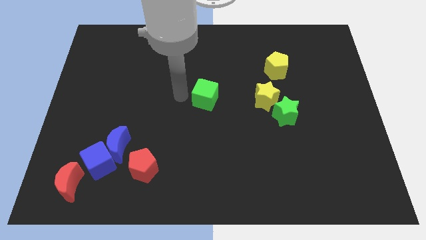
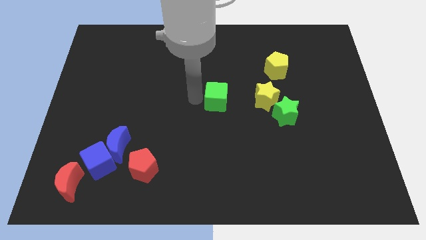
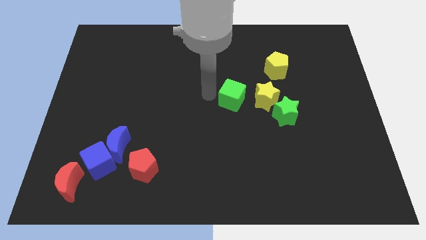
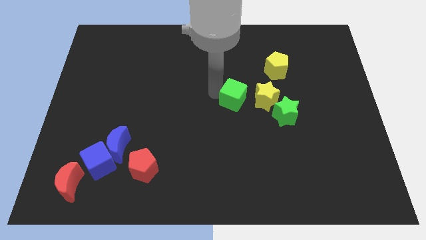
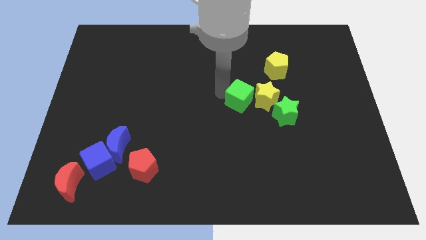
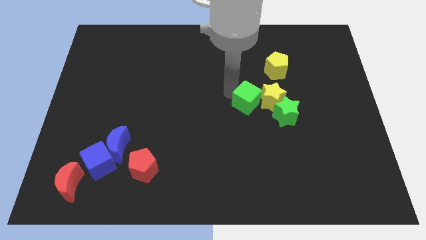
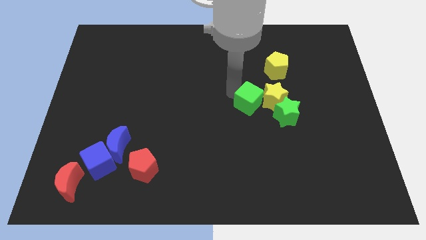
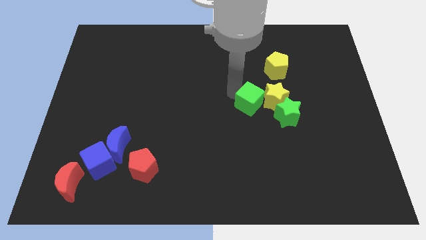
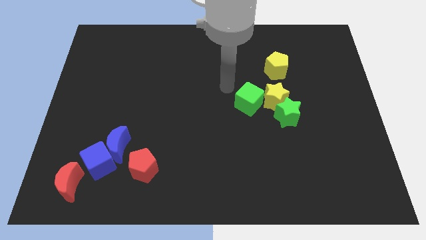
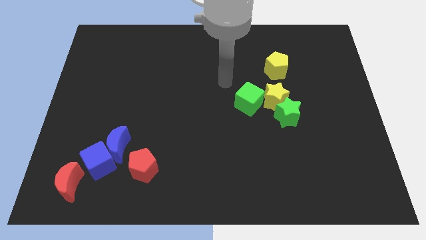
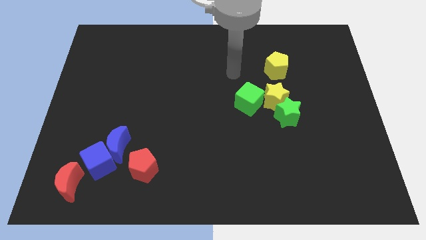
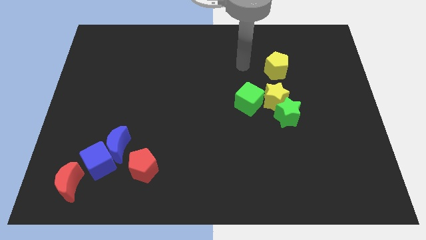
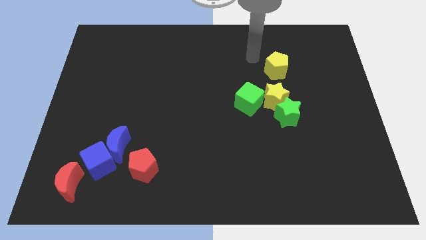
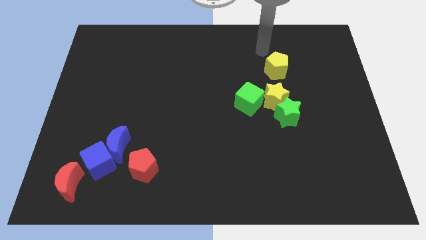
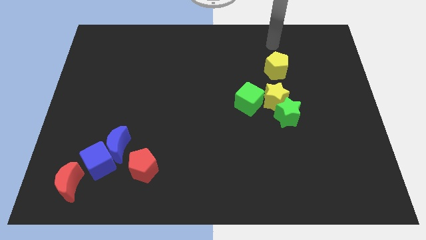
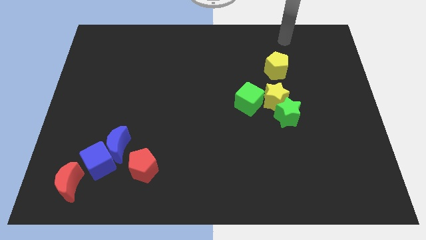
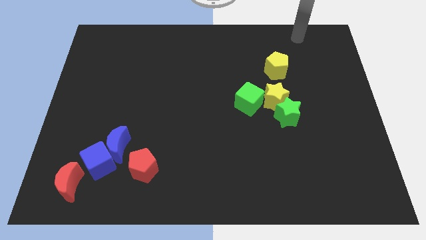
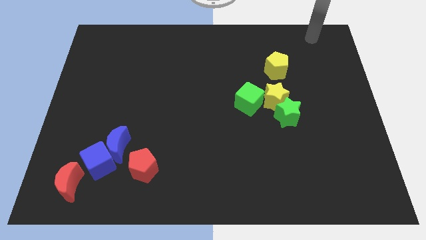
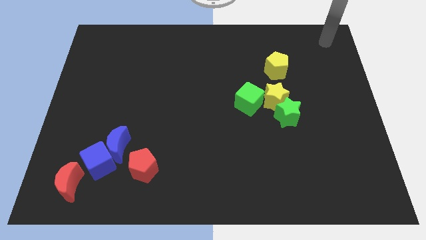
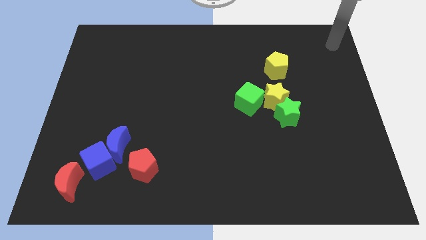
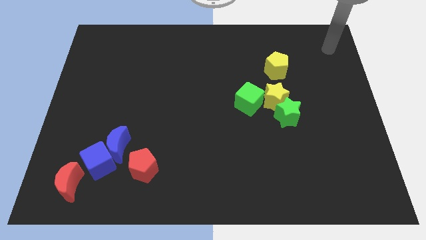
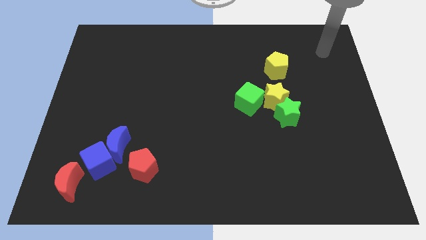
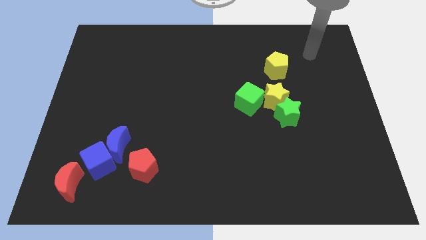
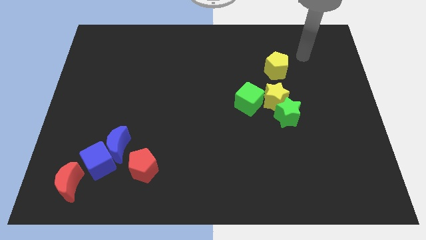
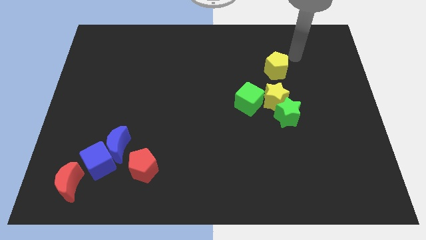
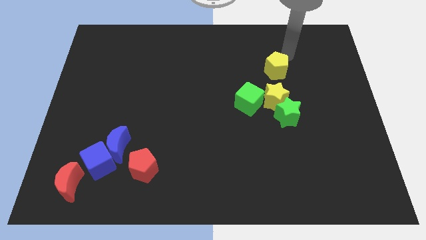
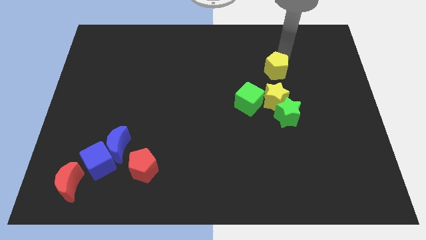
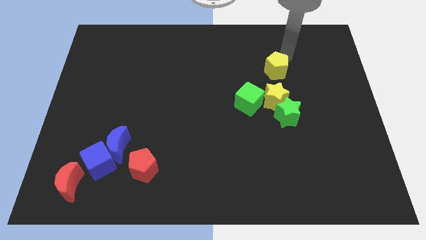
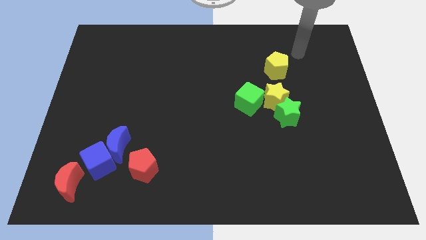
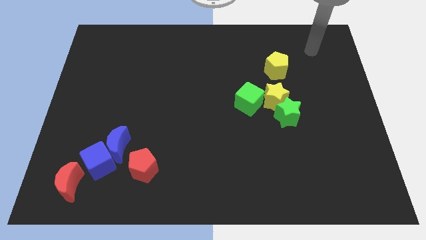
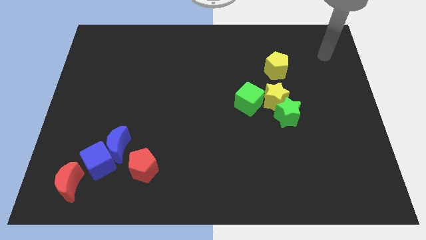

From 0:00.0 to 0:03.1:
move the green cube into the left side of the yellow star and go away

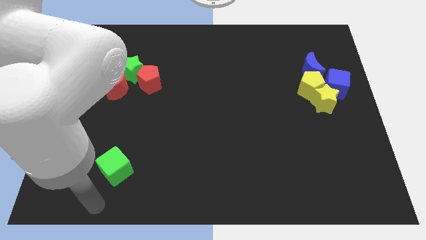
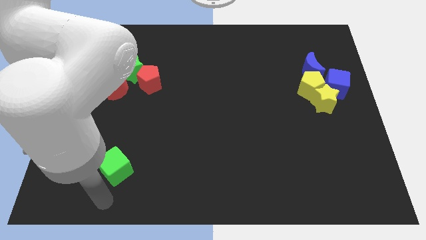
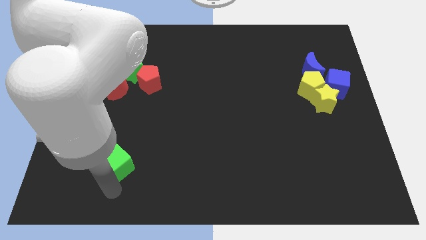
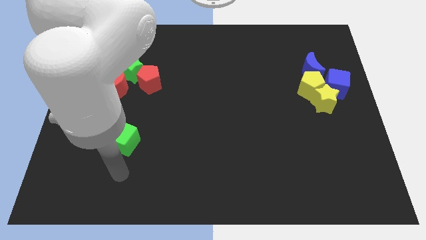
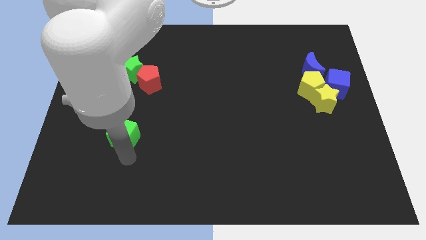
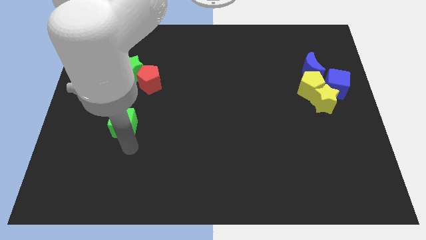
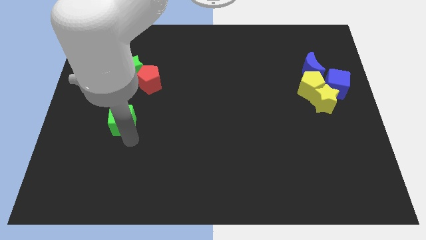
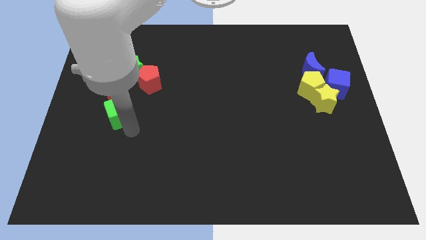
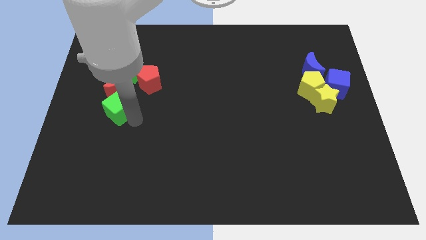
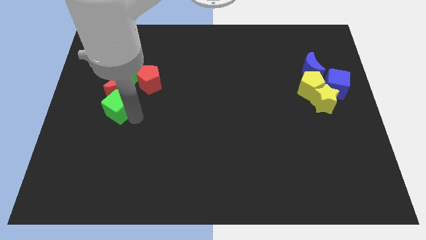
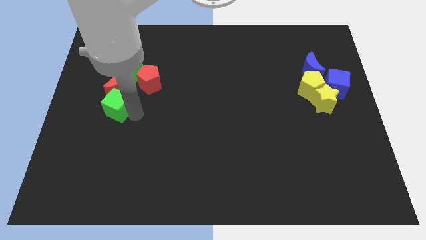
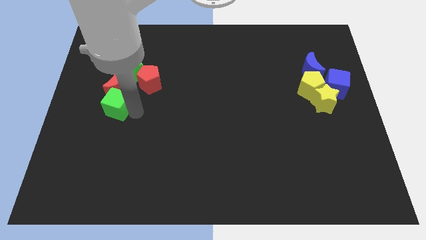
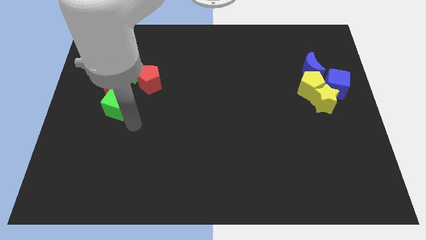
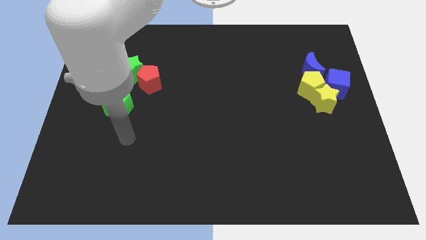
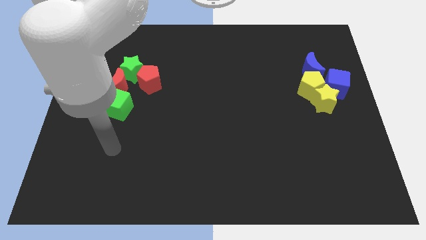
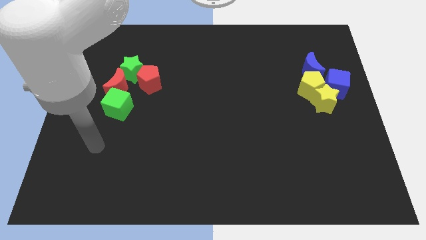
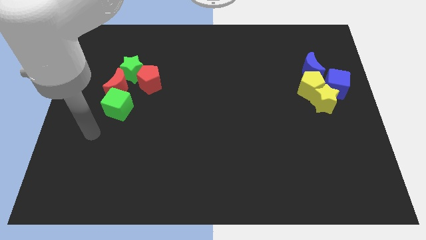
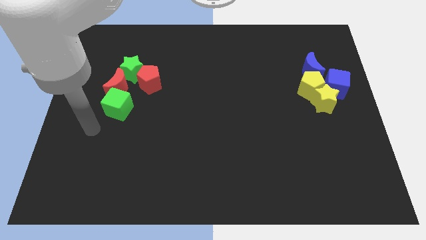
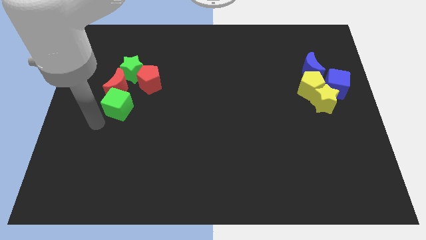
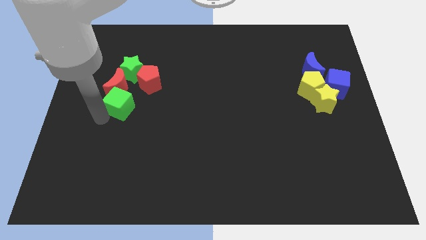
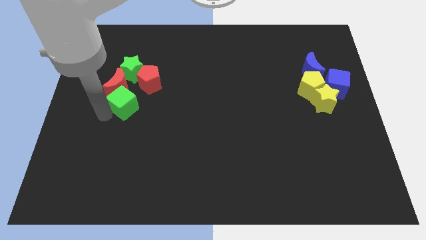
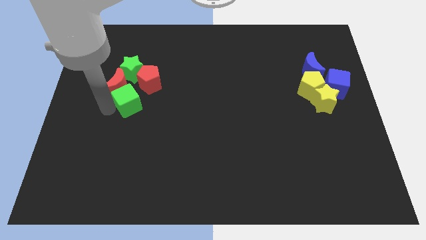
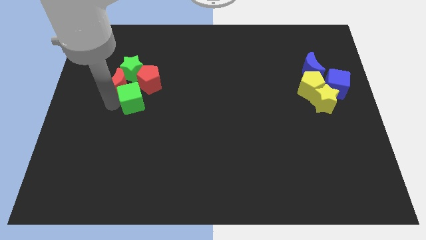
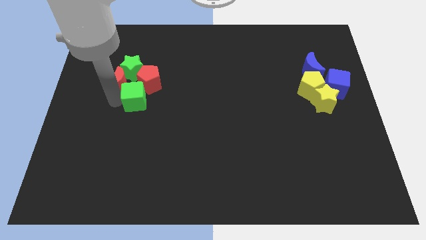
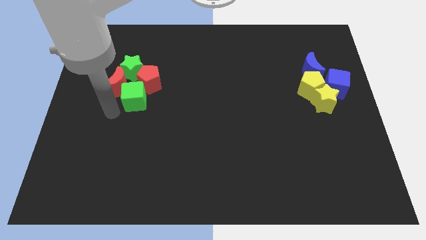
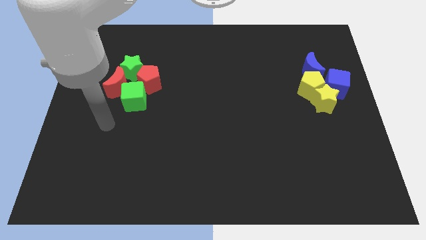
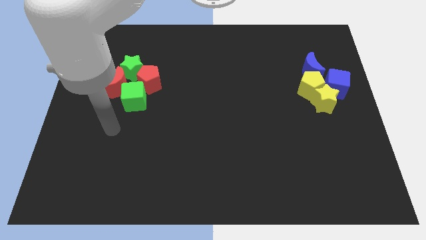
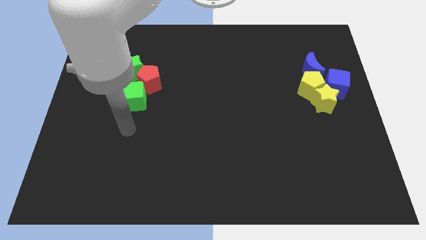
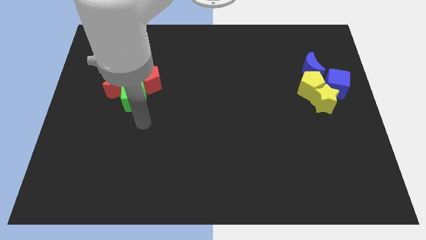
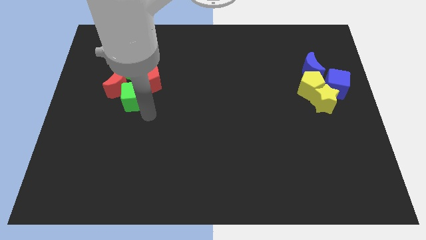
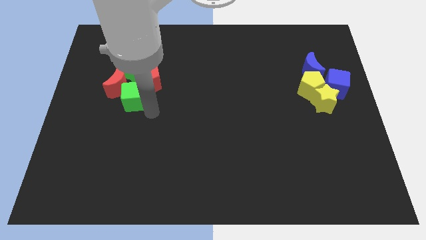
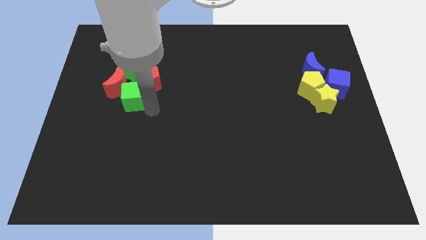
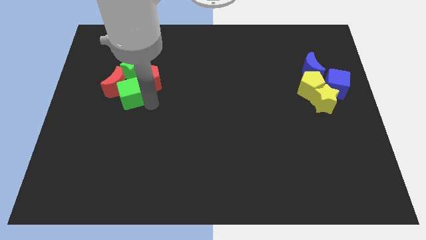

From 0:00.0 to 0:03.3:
push the green cube into the group of block which is at centre left

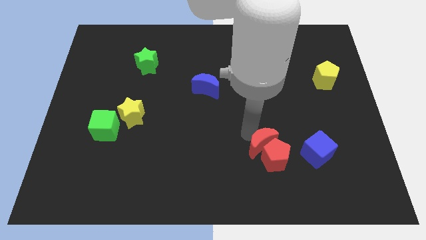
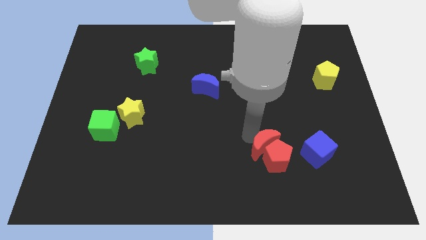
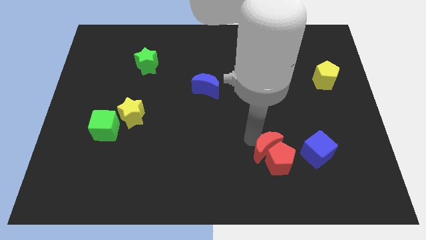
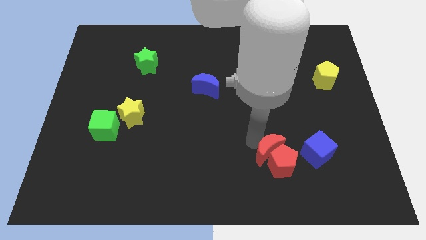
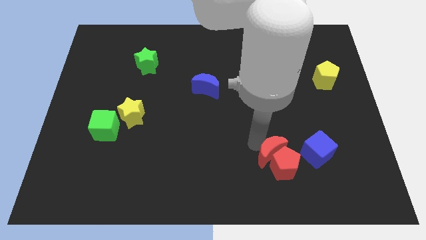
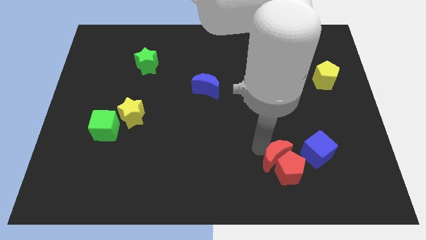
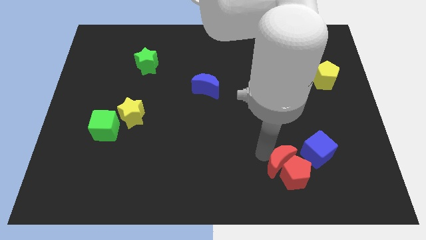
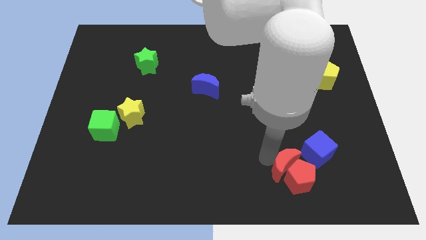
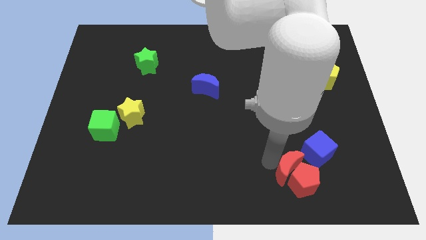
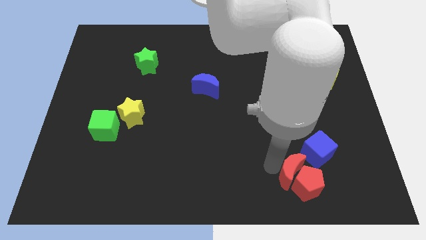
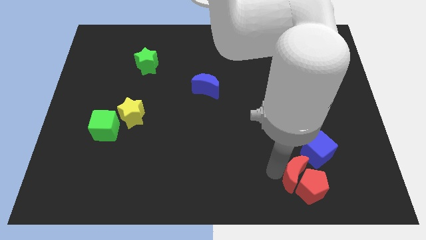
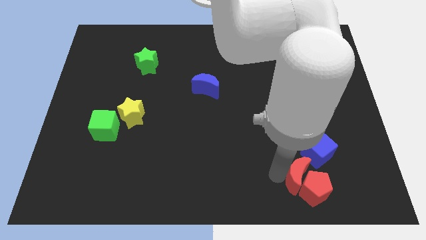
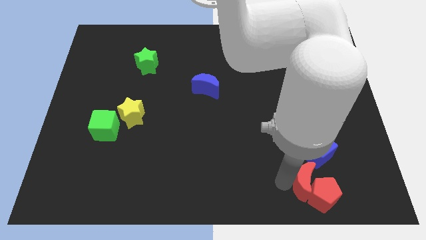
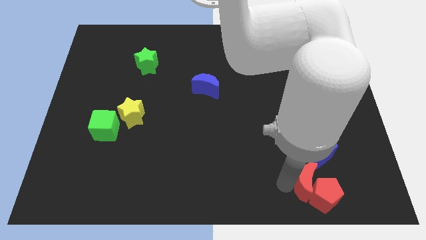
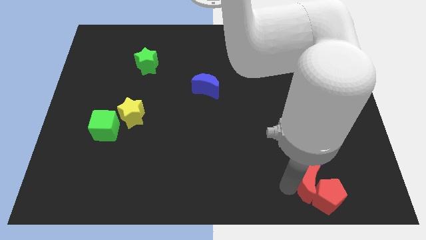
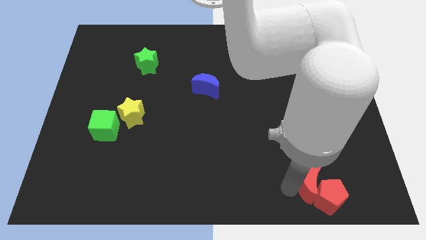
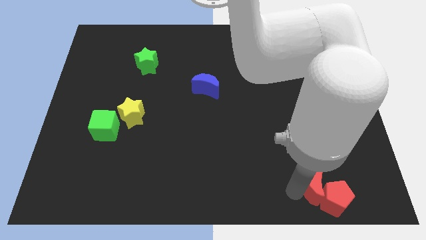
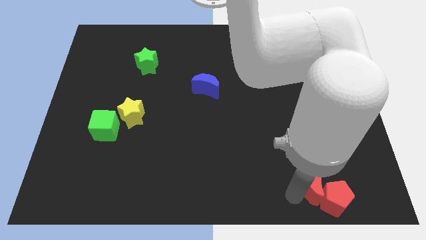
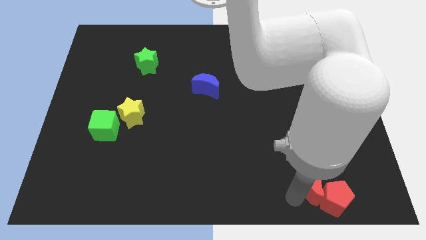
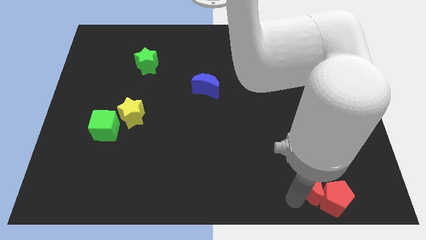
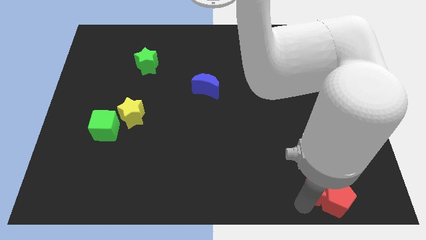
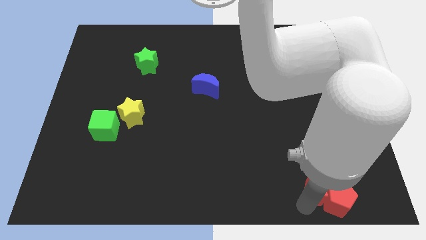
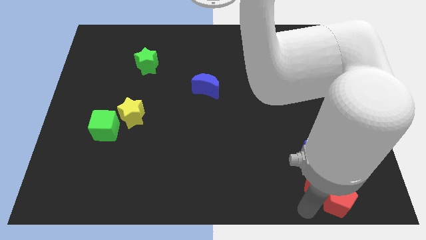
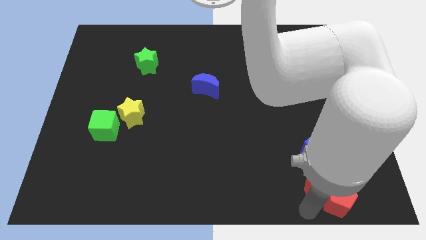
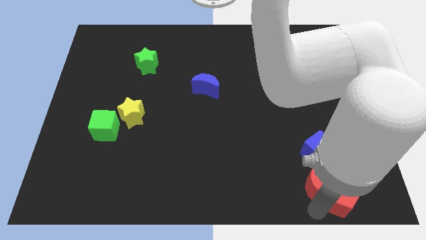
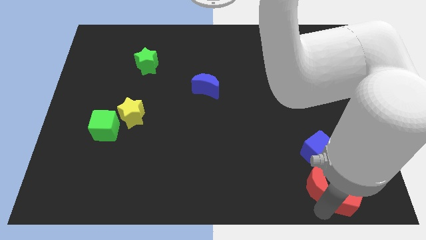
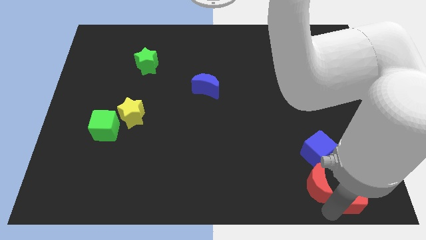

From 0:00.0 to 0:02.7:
push the group of red blocks to the bottom side of the blue cube
